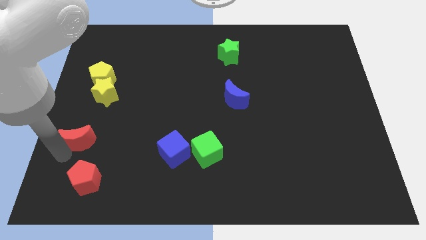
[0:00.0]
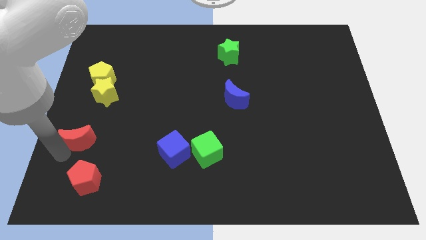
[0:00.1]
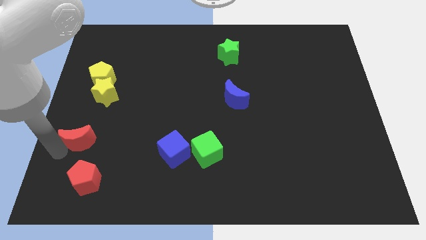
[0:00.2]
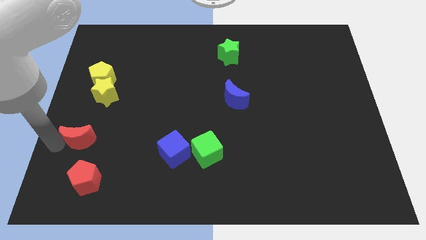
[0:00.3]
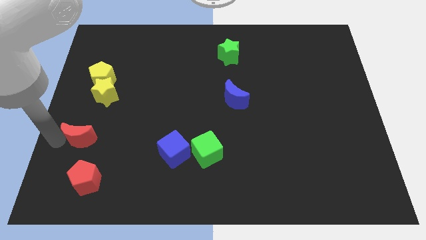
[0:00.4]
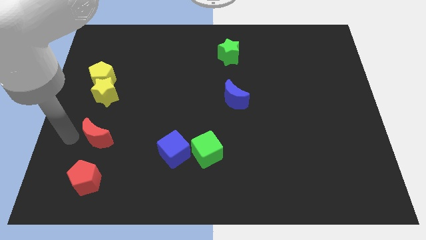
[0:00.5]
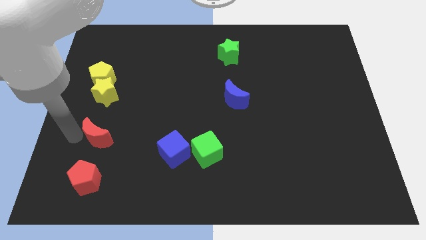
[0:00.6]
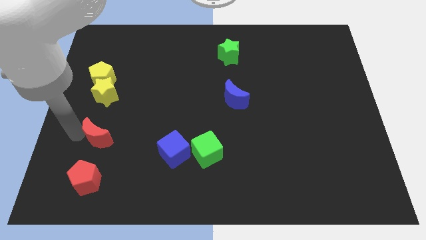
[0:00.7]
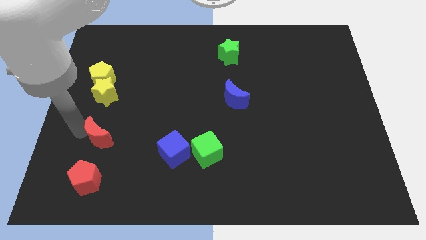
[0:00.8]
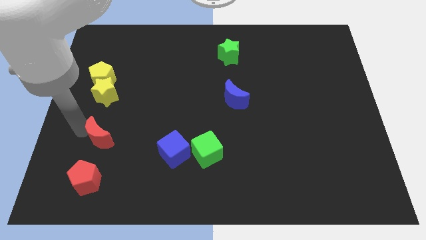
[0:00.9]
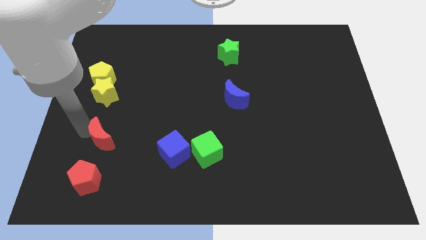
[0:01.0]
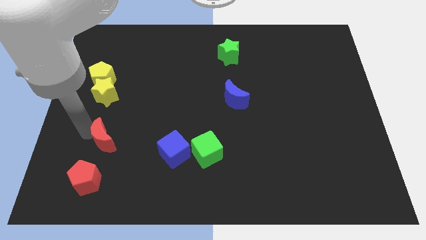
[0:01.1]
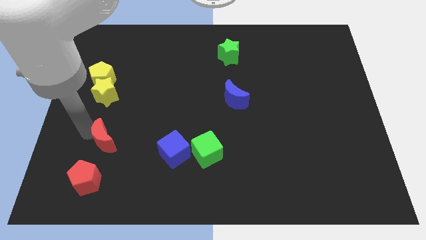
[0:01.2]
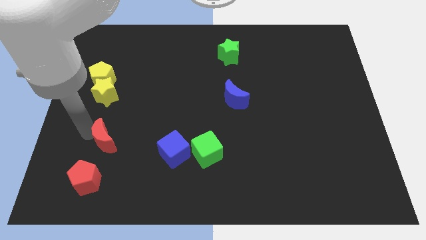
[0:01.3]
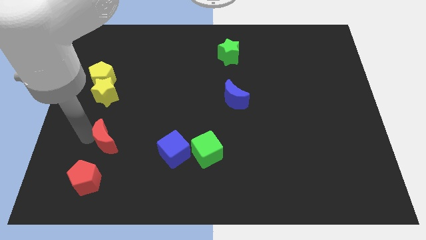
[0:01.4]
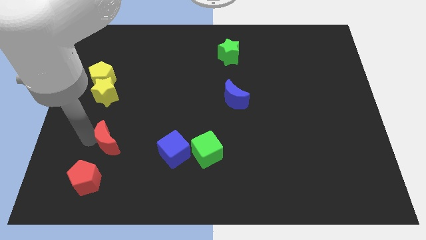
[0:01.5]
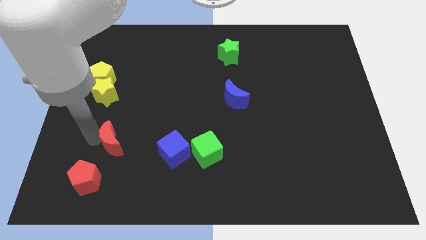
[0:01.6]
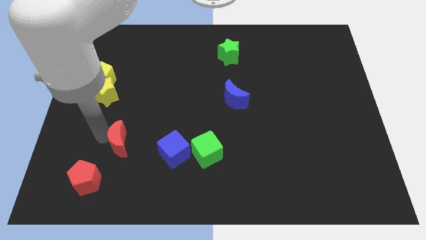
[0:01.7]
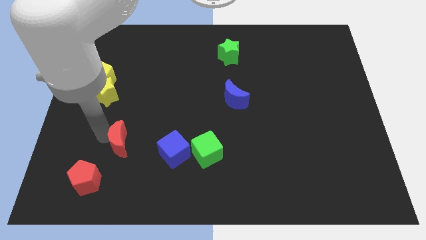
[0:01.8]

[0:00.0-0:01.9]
push the red crescent towards the blue cube

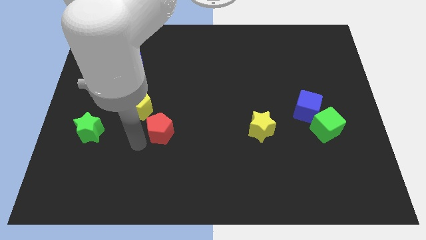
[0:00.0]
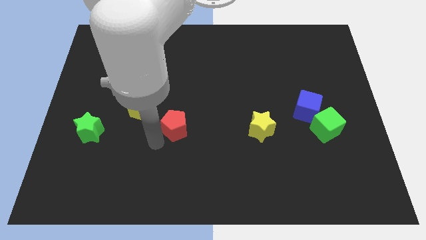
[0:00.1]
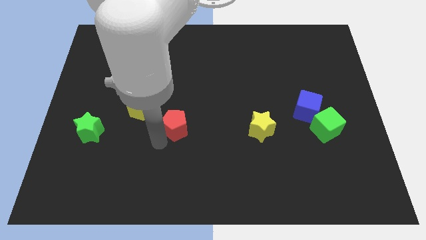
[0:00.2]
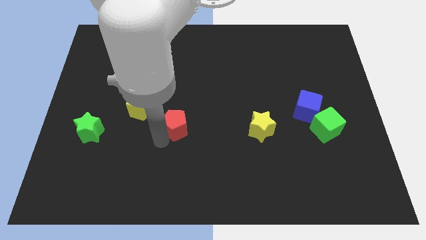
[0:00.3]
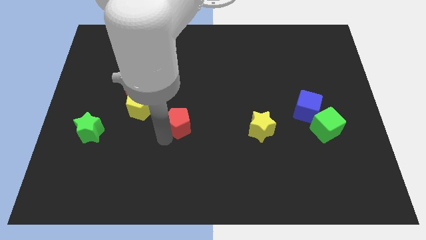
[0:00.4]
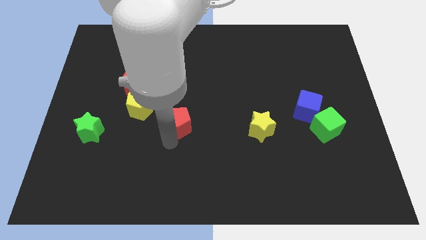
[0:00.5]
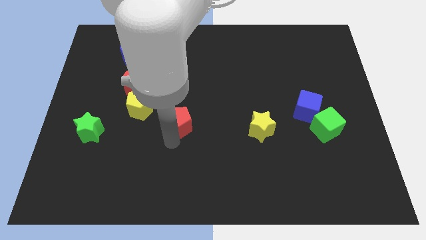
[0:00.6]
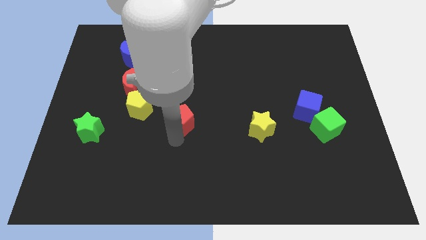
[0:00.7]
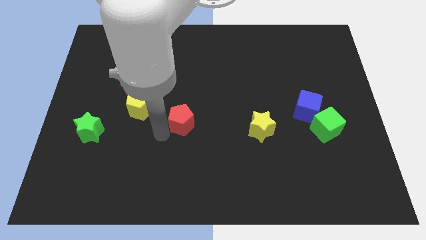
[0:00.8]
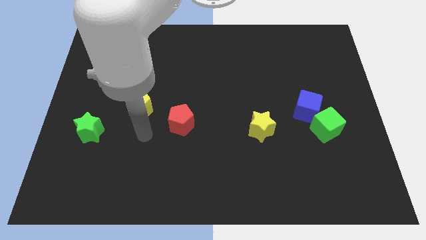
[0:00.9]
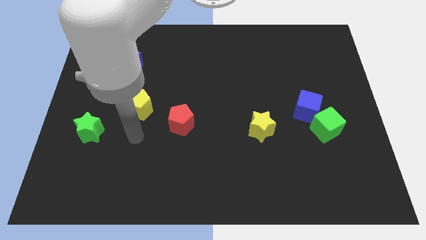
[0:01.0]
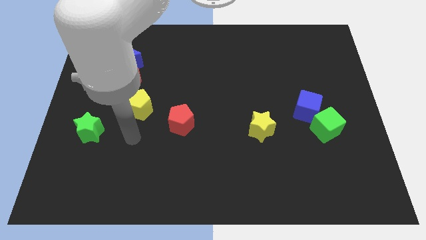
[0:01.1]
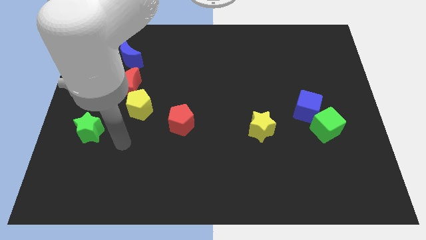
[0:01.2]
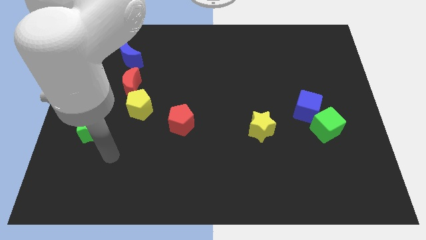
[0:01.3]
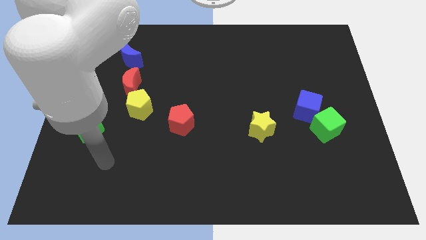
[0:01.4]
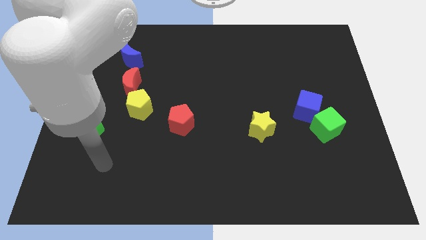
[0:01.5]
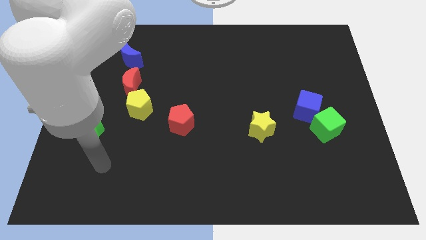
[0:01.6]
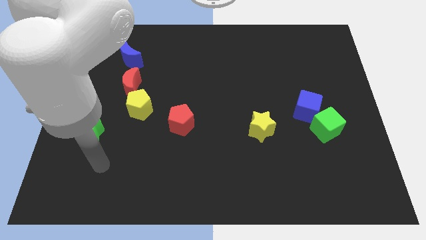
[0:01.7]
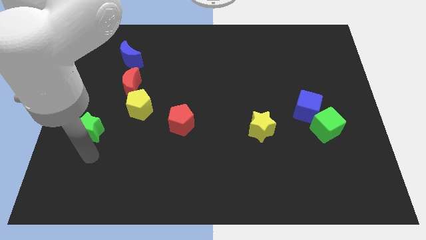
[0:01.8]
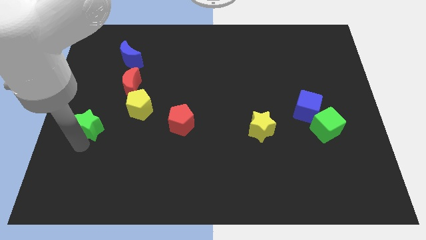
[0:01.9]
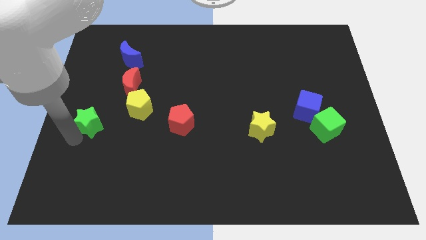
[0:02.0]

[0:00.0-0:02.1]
move red pentagon and green star slightly up

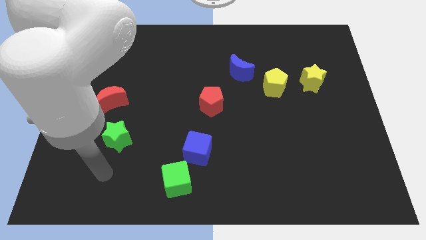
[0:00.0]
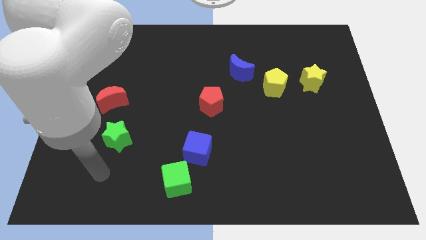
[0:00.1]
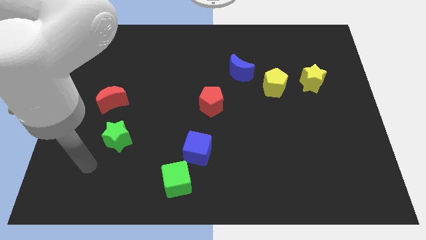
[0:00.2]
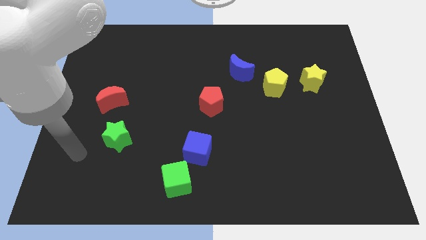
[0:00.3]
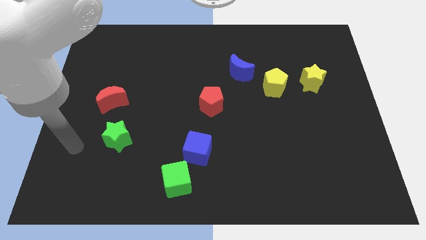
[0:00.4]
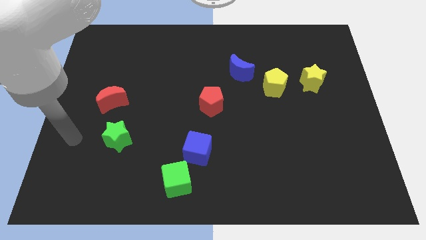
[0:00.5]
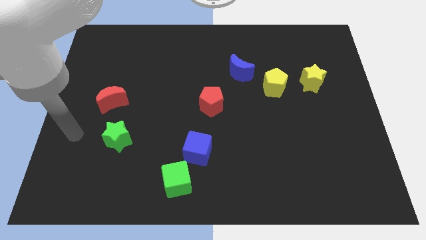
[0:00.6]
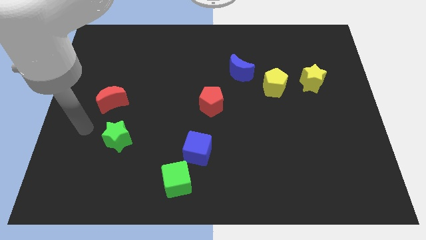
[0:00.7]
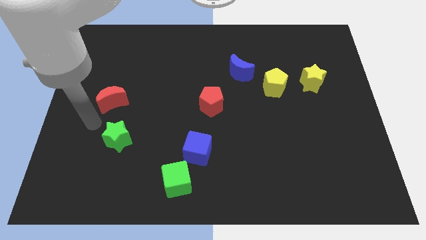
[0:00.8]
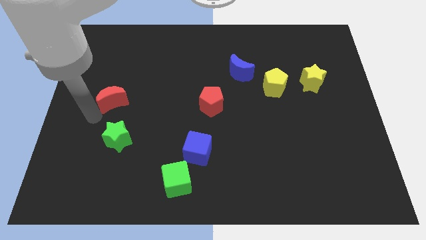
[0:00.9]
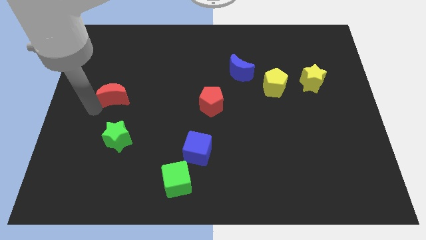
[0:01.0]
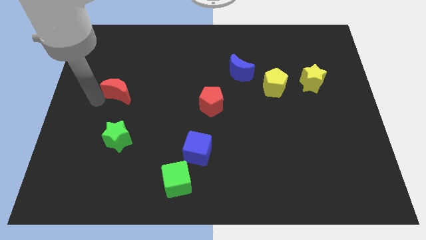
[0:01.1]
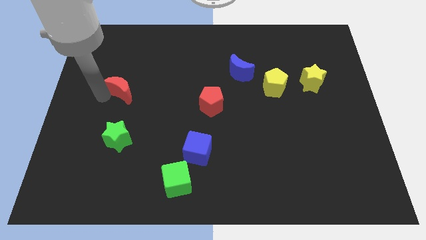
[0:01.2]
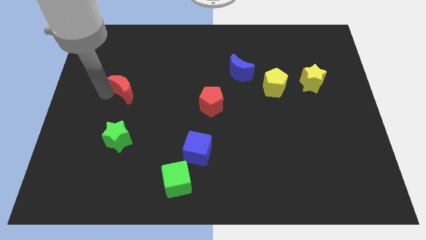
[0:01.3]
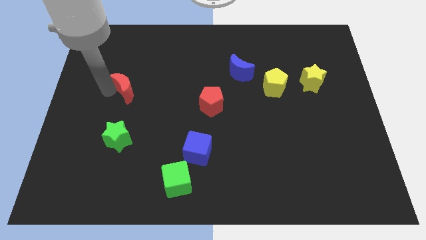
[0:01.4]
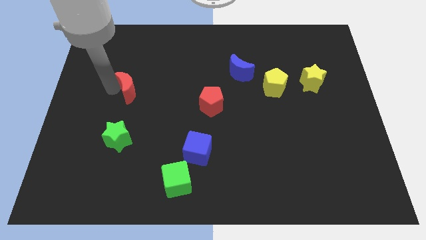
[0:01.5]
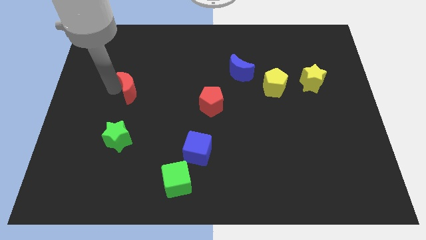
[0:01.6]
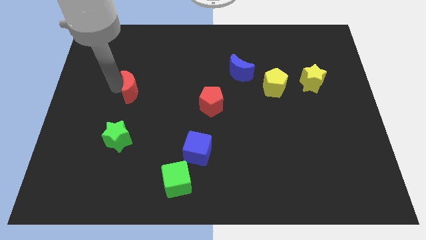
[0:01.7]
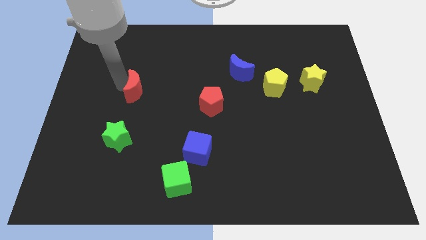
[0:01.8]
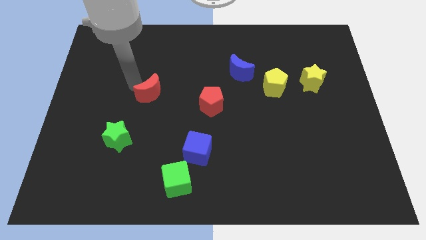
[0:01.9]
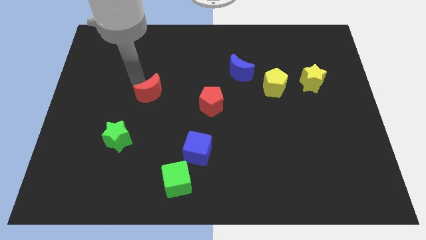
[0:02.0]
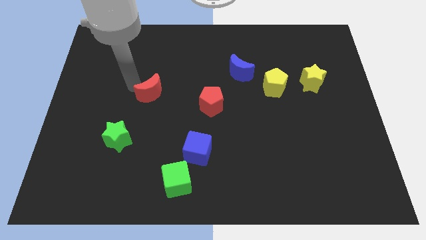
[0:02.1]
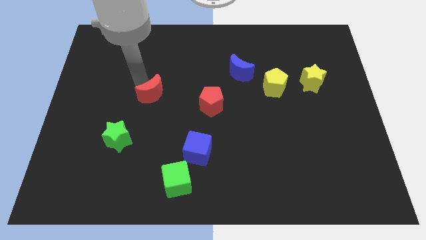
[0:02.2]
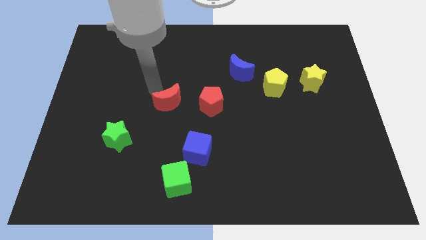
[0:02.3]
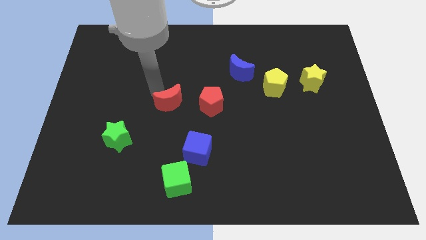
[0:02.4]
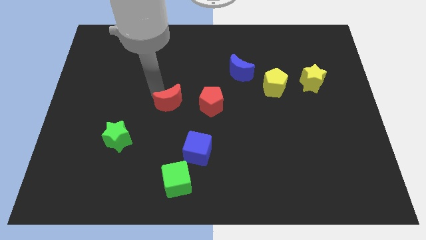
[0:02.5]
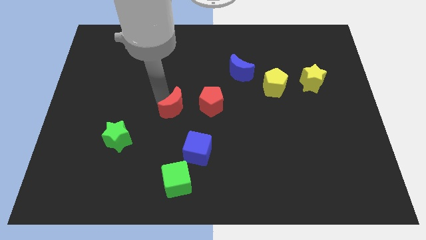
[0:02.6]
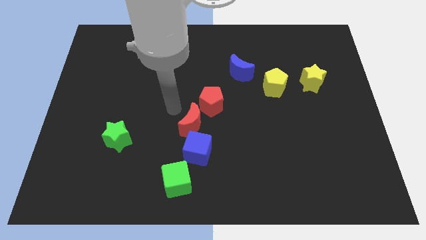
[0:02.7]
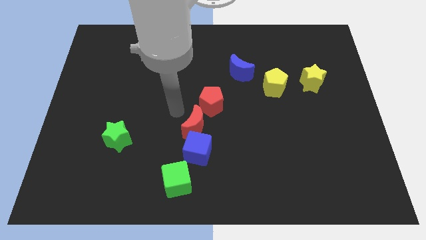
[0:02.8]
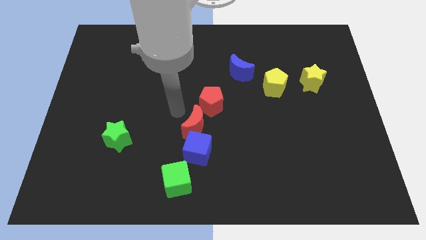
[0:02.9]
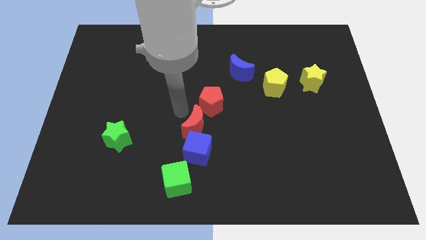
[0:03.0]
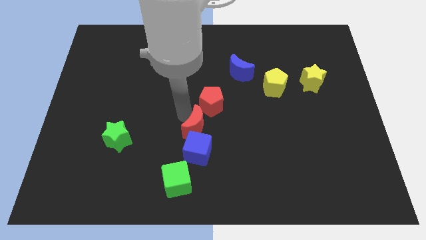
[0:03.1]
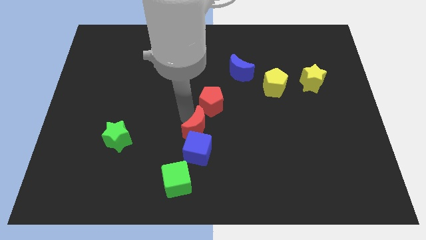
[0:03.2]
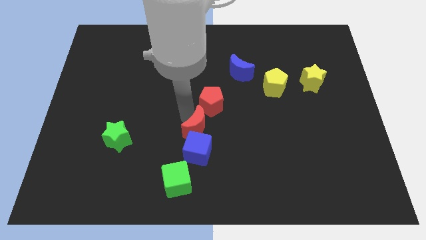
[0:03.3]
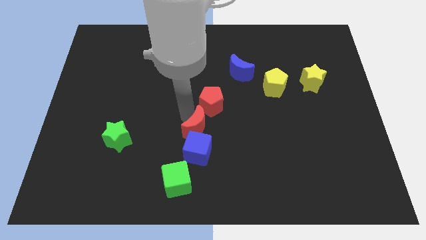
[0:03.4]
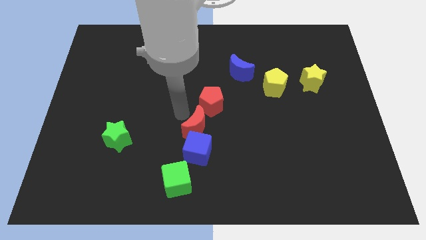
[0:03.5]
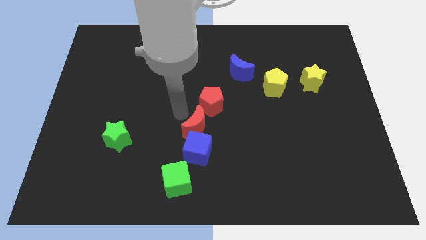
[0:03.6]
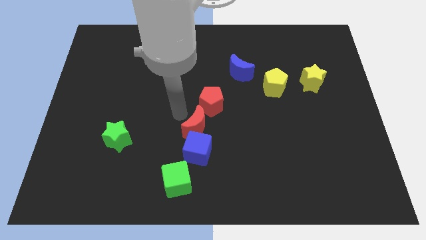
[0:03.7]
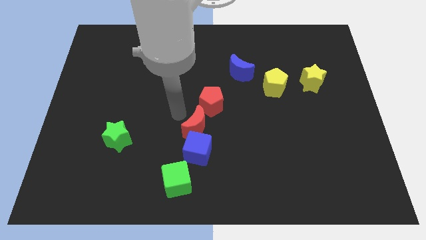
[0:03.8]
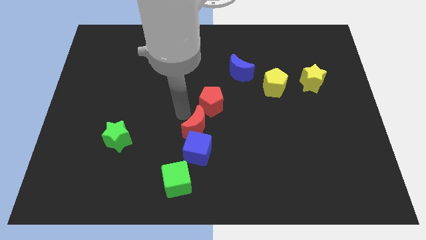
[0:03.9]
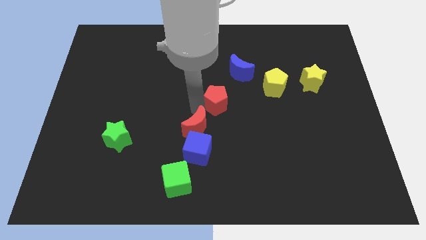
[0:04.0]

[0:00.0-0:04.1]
push the red crescent to the top of the blue cube

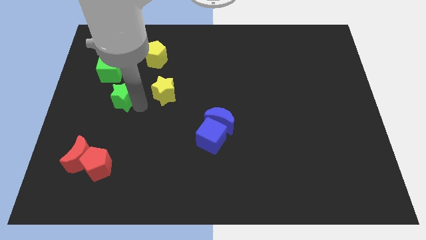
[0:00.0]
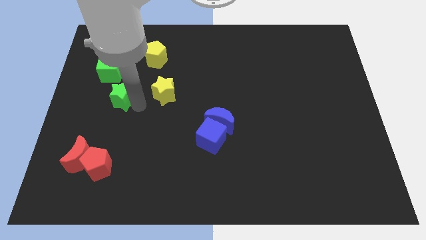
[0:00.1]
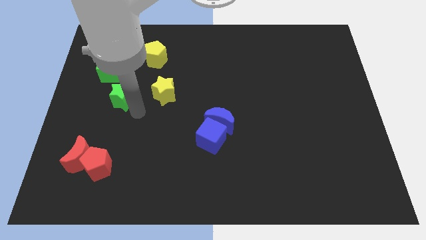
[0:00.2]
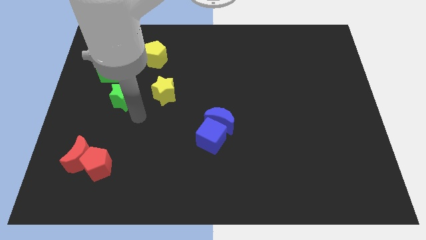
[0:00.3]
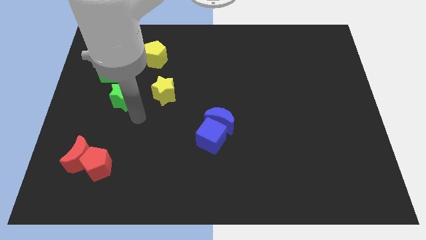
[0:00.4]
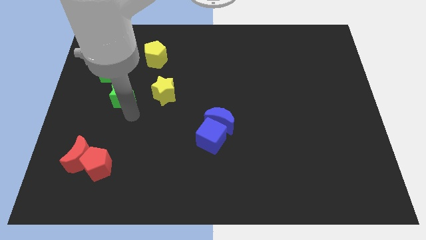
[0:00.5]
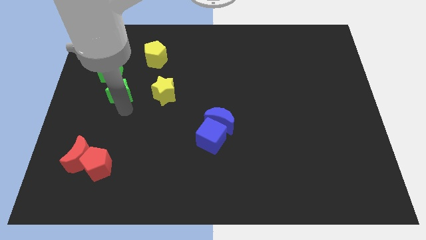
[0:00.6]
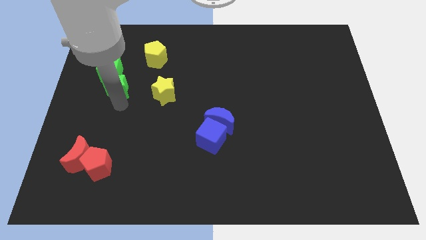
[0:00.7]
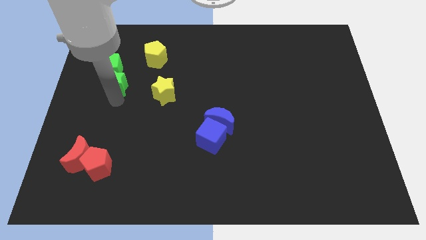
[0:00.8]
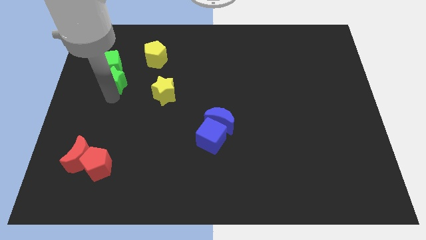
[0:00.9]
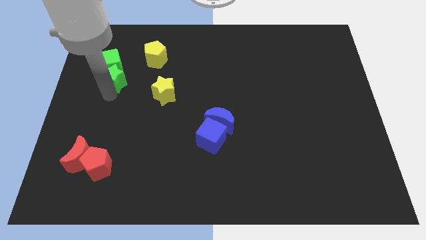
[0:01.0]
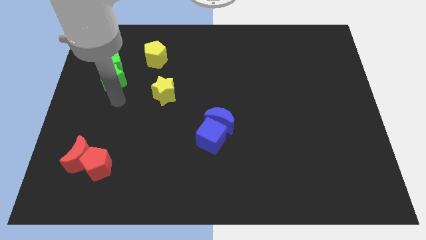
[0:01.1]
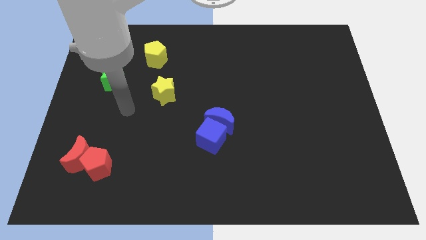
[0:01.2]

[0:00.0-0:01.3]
push the green star into the bottom side of the green cube
